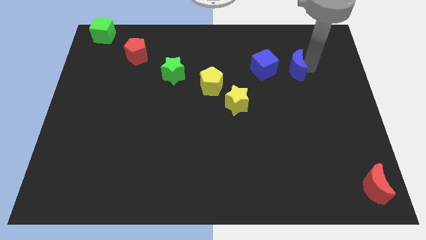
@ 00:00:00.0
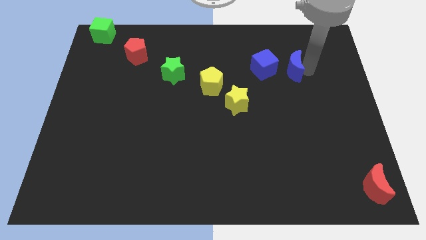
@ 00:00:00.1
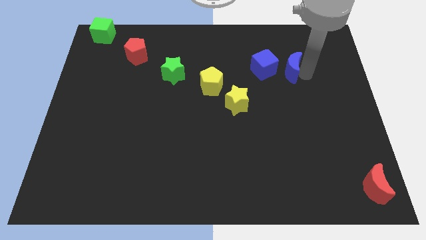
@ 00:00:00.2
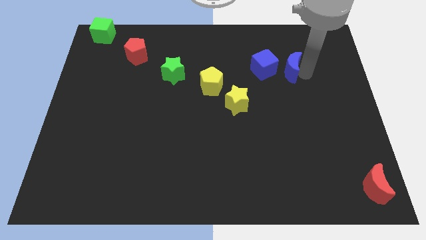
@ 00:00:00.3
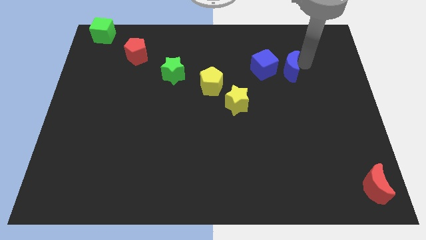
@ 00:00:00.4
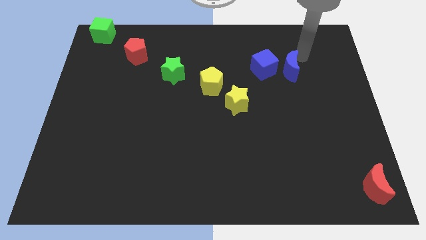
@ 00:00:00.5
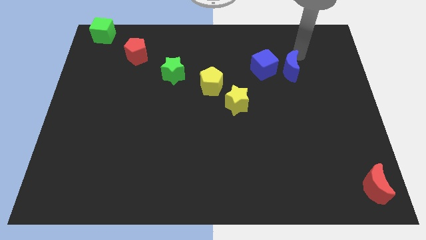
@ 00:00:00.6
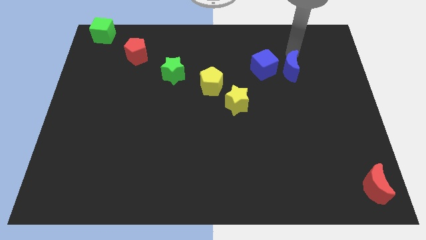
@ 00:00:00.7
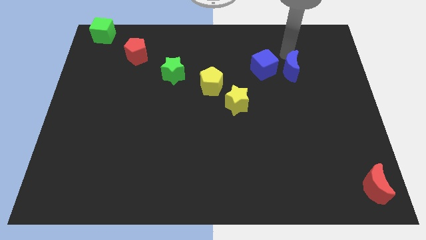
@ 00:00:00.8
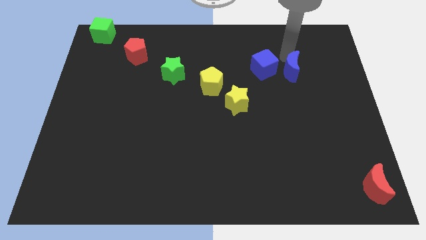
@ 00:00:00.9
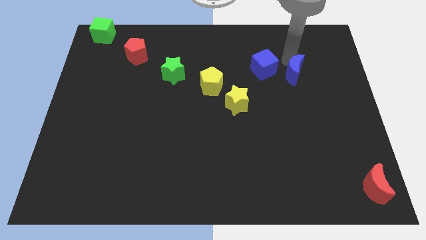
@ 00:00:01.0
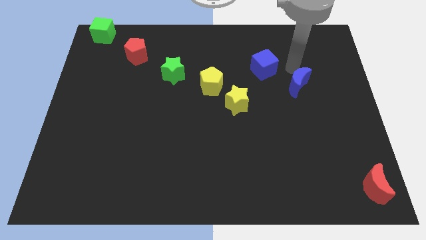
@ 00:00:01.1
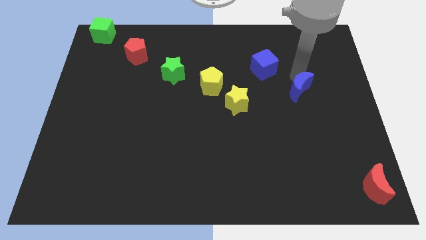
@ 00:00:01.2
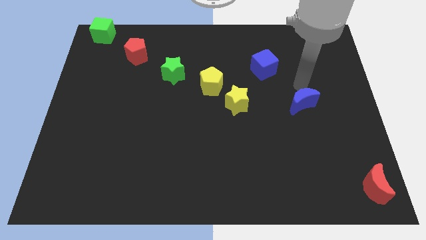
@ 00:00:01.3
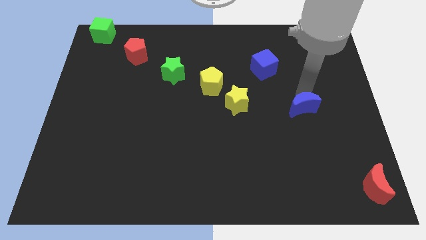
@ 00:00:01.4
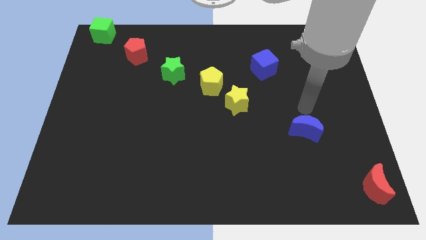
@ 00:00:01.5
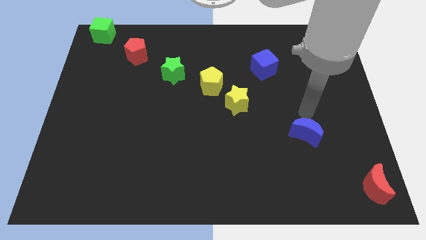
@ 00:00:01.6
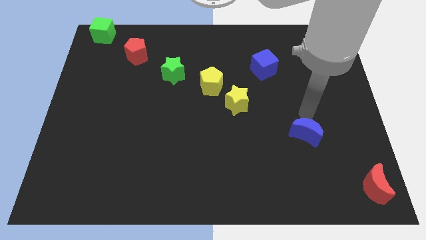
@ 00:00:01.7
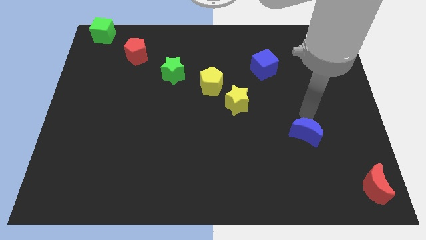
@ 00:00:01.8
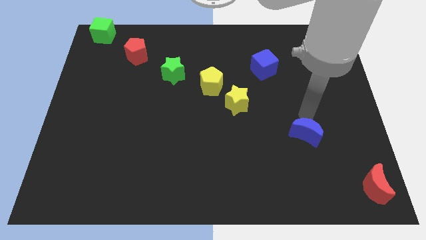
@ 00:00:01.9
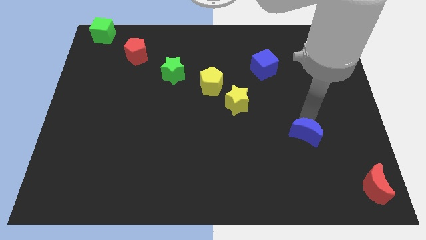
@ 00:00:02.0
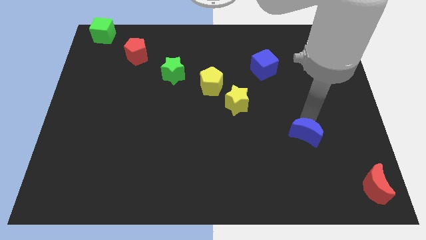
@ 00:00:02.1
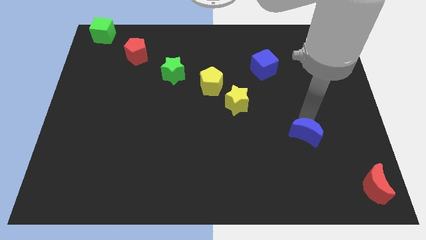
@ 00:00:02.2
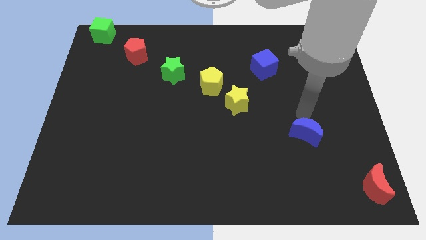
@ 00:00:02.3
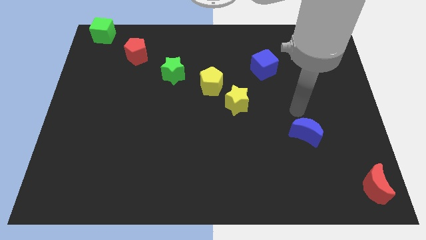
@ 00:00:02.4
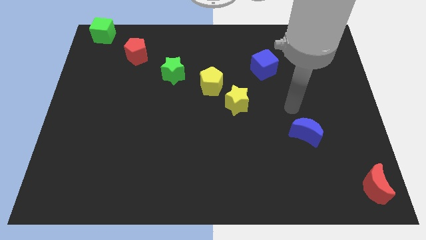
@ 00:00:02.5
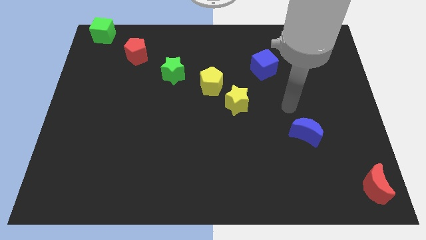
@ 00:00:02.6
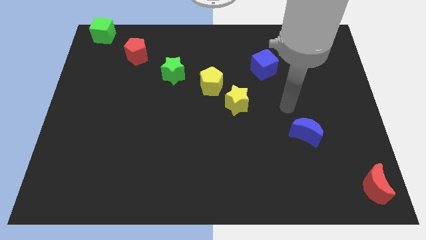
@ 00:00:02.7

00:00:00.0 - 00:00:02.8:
place blue cube in between red moon and yellow star

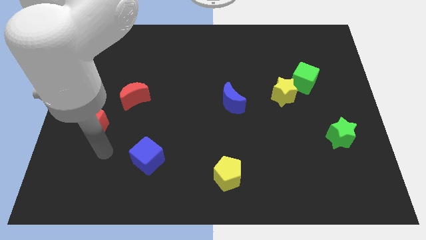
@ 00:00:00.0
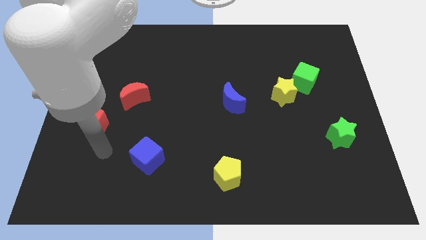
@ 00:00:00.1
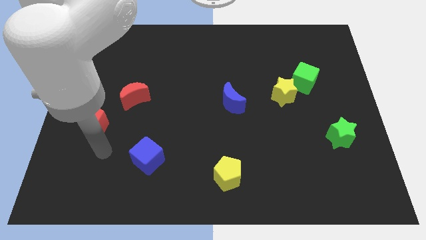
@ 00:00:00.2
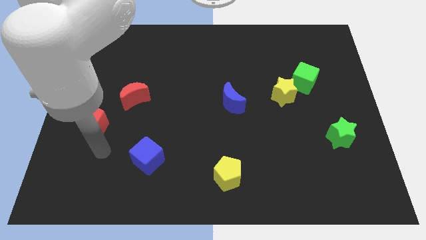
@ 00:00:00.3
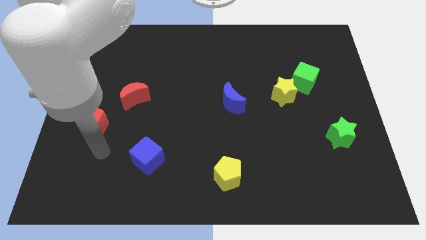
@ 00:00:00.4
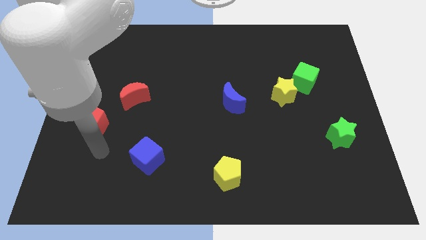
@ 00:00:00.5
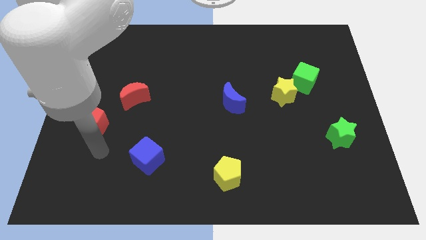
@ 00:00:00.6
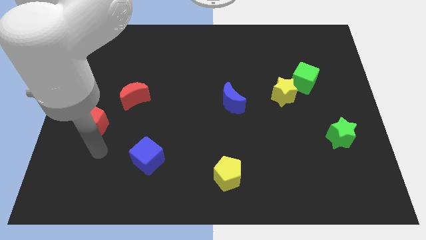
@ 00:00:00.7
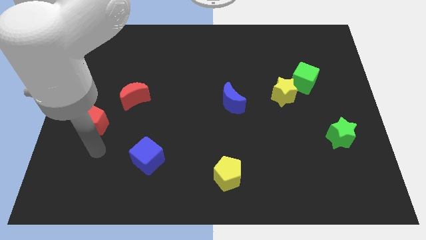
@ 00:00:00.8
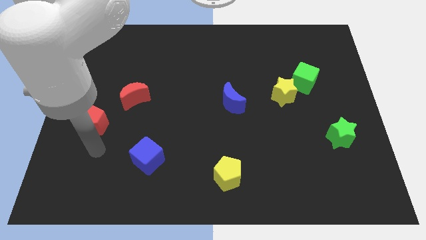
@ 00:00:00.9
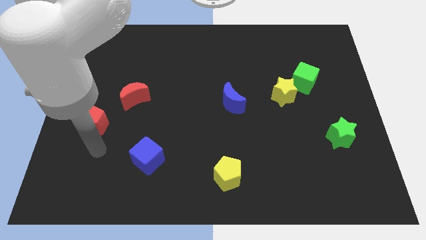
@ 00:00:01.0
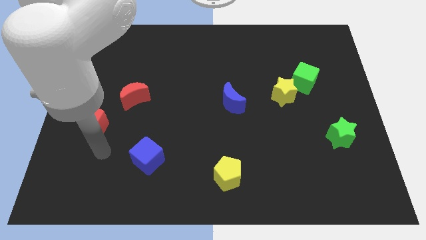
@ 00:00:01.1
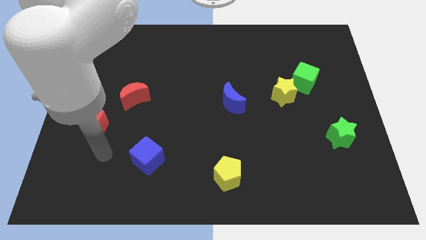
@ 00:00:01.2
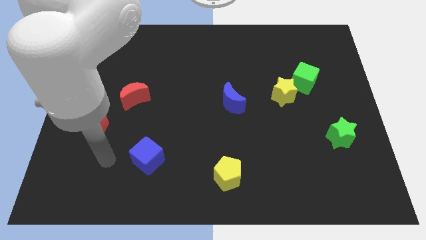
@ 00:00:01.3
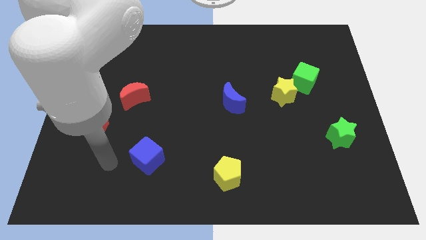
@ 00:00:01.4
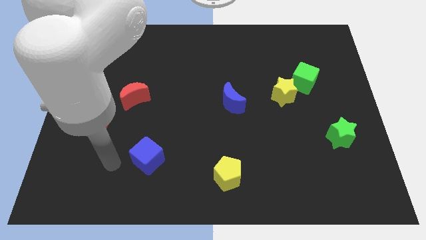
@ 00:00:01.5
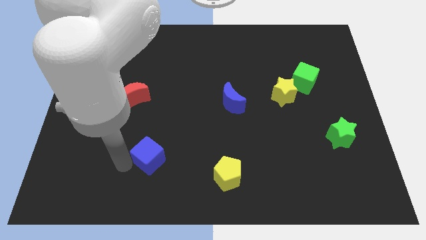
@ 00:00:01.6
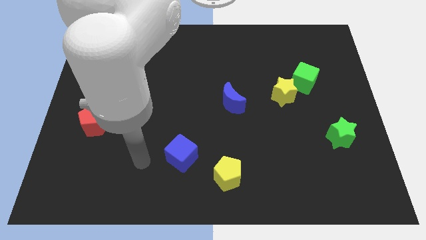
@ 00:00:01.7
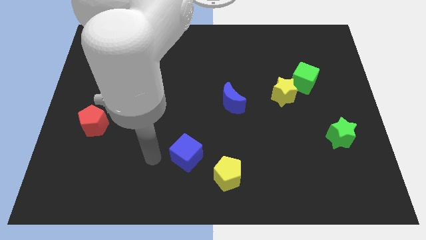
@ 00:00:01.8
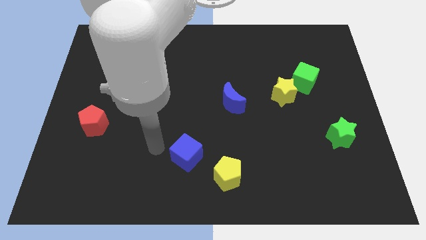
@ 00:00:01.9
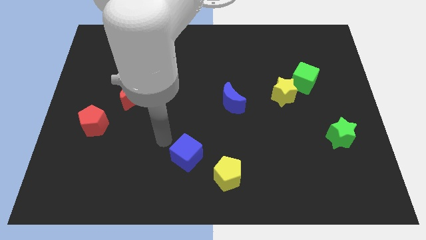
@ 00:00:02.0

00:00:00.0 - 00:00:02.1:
place the blue cube to the top left of the yellow pentagon

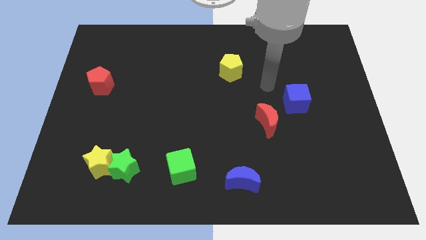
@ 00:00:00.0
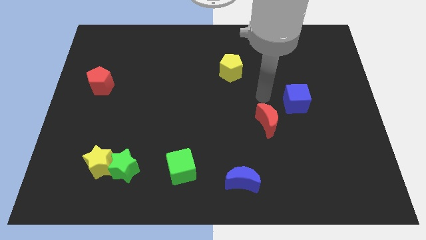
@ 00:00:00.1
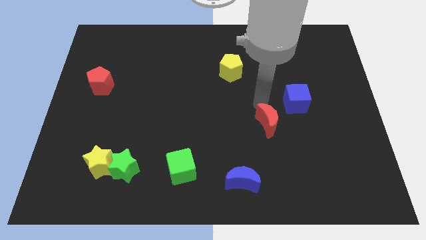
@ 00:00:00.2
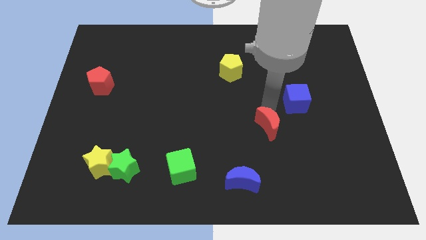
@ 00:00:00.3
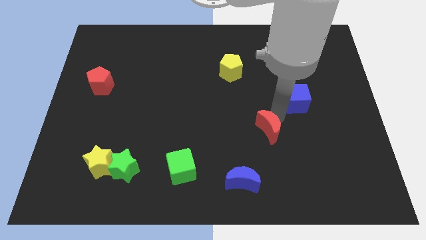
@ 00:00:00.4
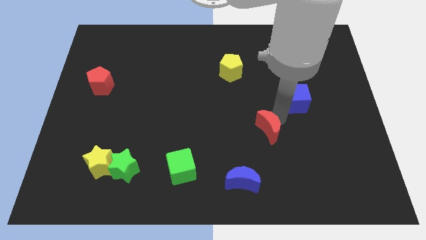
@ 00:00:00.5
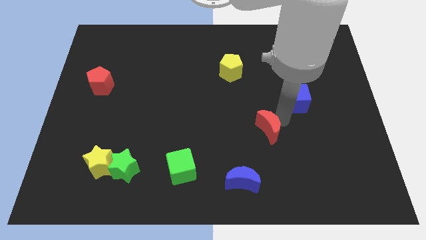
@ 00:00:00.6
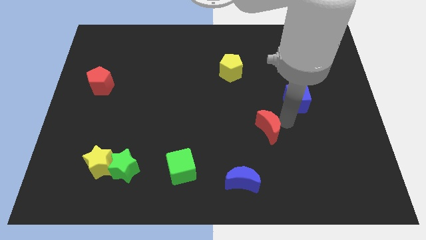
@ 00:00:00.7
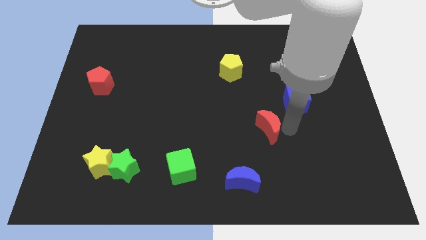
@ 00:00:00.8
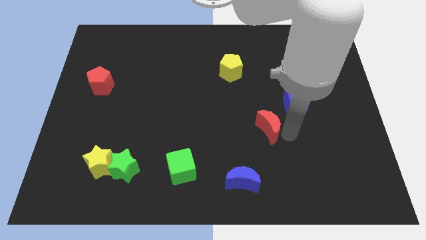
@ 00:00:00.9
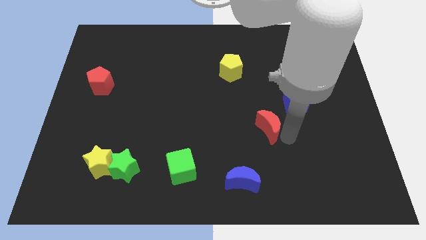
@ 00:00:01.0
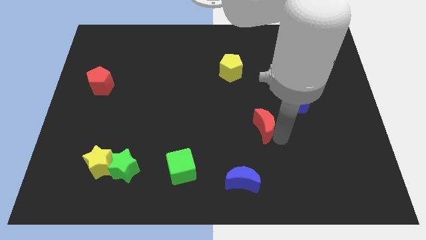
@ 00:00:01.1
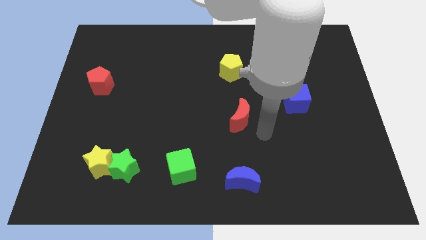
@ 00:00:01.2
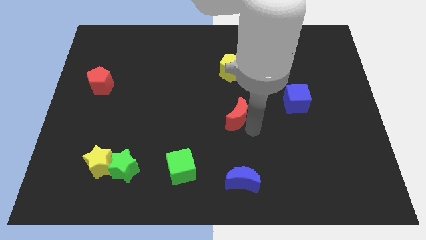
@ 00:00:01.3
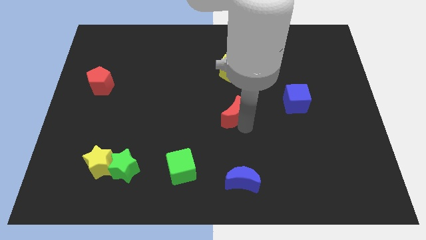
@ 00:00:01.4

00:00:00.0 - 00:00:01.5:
move red moon below yellow pentagon

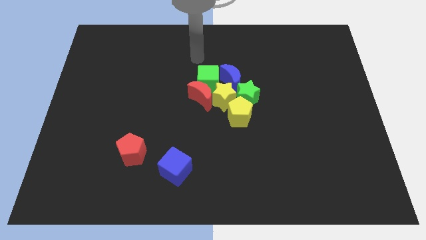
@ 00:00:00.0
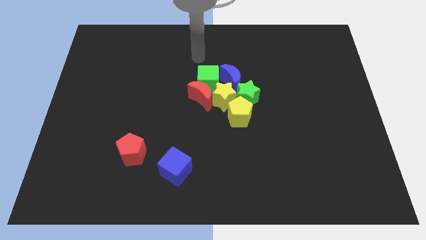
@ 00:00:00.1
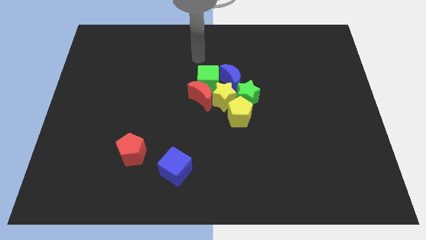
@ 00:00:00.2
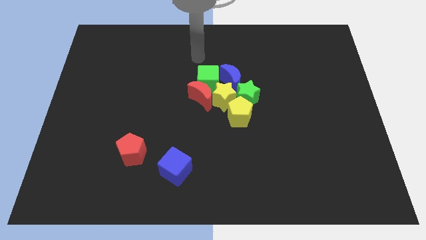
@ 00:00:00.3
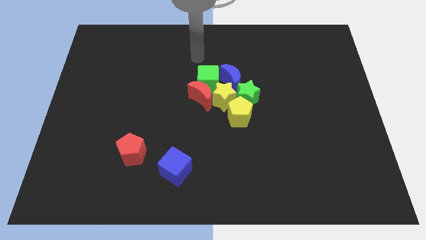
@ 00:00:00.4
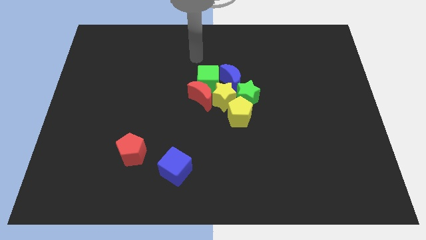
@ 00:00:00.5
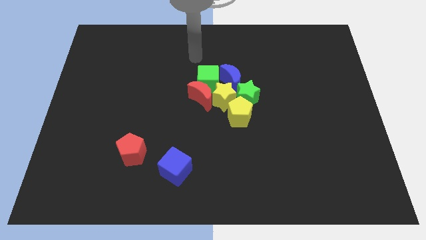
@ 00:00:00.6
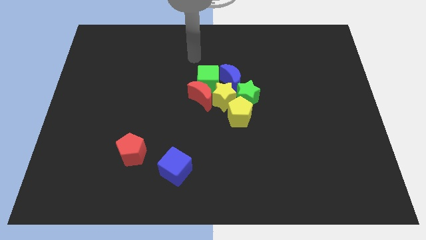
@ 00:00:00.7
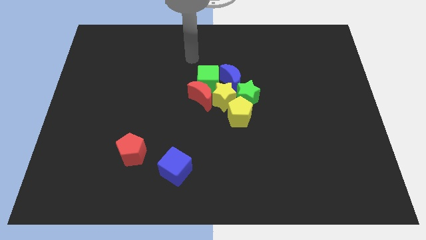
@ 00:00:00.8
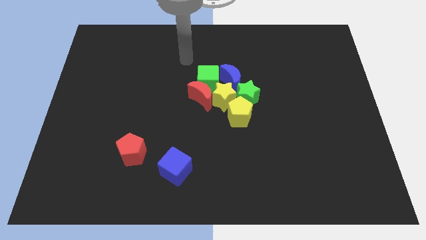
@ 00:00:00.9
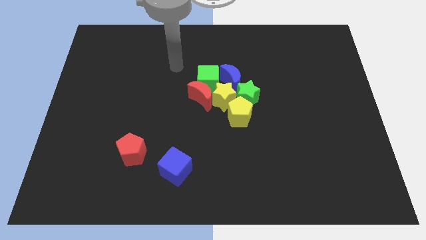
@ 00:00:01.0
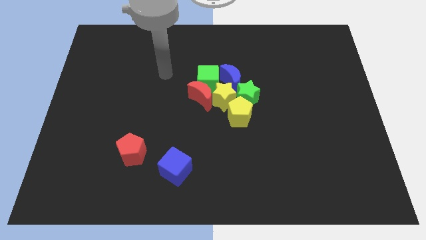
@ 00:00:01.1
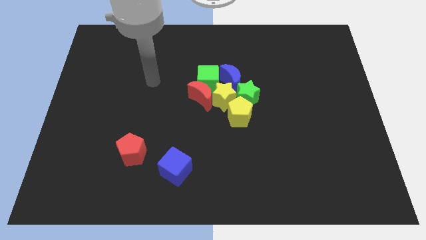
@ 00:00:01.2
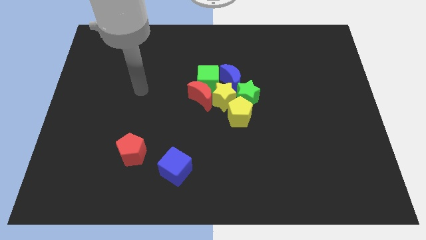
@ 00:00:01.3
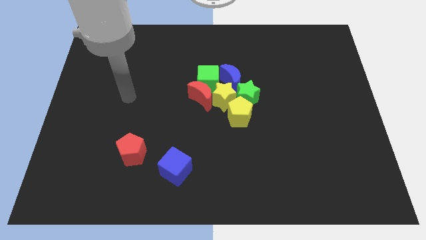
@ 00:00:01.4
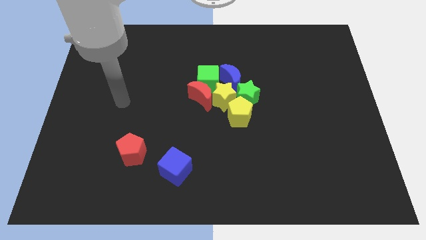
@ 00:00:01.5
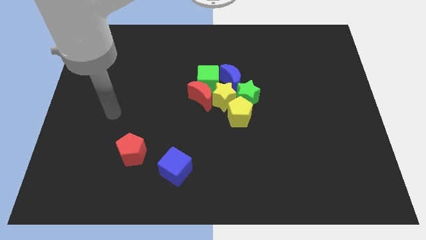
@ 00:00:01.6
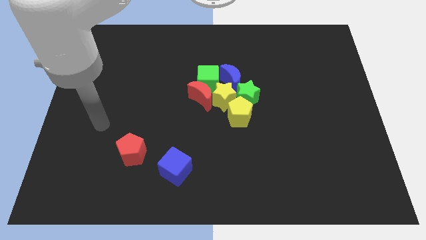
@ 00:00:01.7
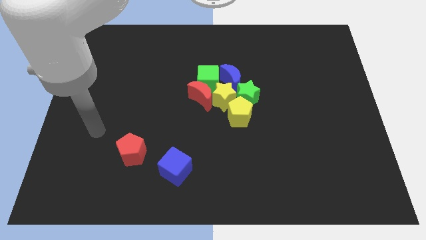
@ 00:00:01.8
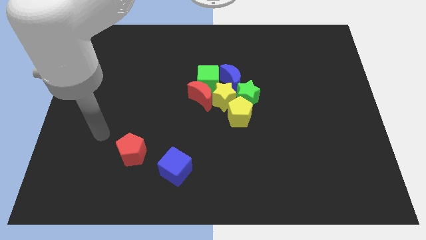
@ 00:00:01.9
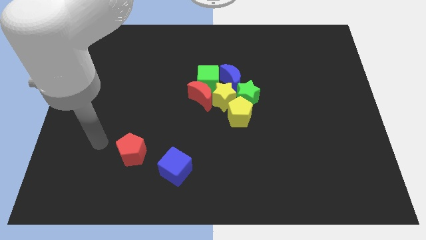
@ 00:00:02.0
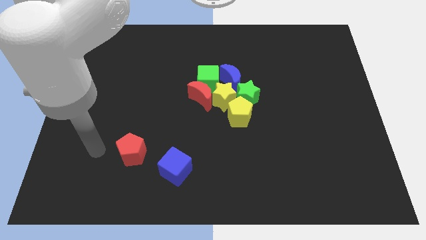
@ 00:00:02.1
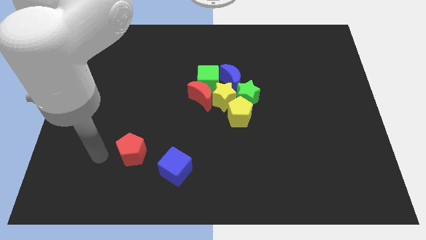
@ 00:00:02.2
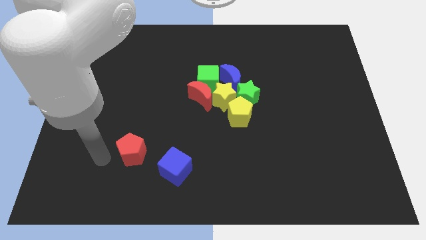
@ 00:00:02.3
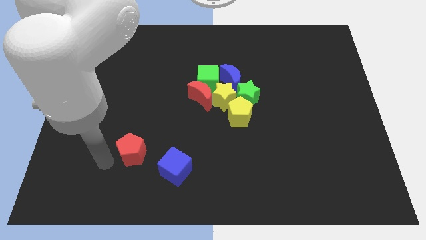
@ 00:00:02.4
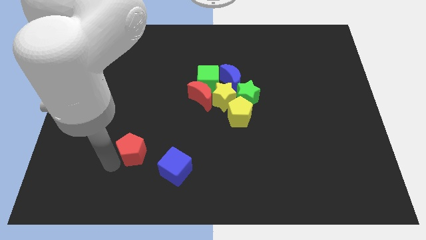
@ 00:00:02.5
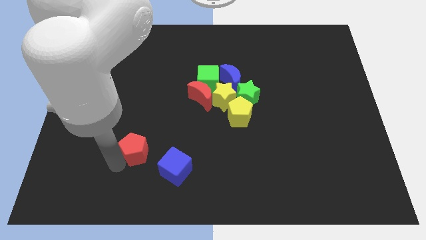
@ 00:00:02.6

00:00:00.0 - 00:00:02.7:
move the pointer to the left side of the red pentagon
